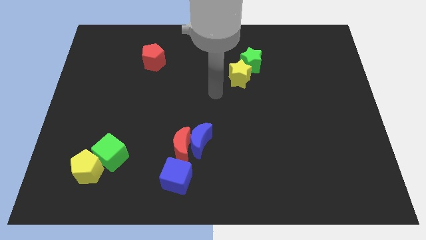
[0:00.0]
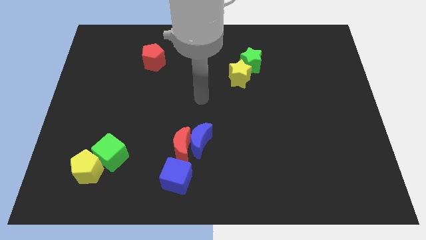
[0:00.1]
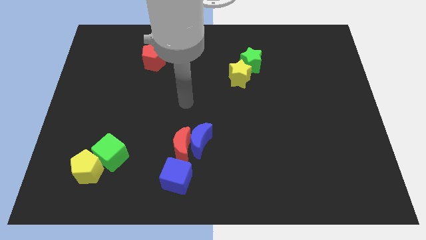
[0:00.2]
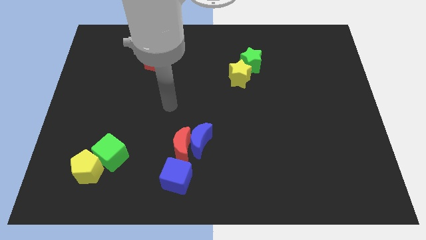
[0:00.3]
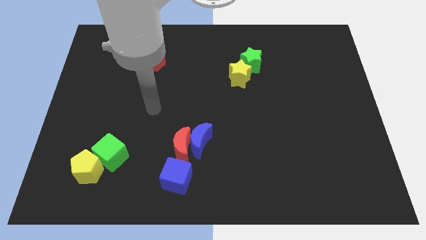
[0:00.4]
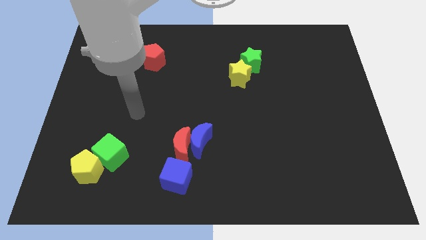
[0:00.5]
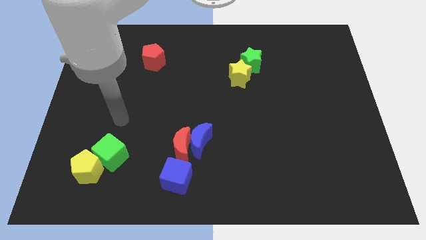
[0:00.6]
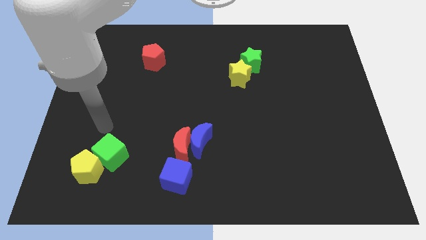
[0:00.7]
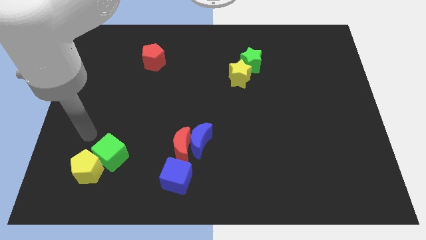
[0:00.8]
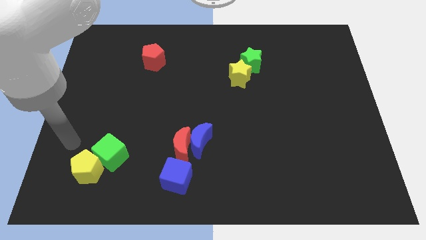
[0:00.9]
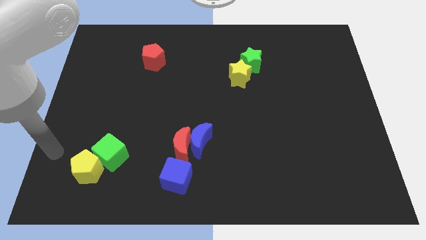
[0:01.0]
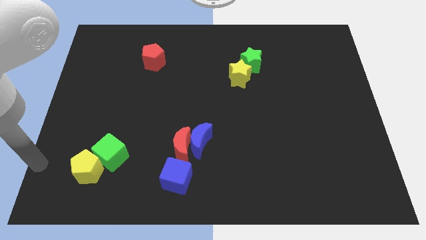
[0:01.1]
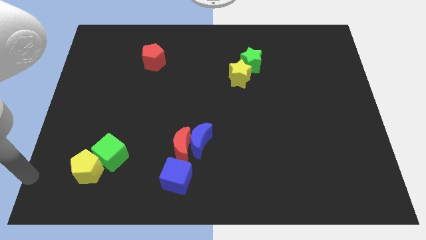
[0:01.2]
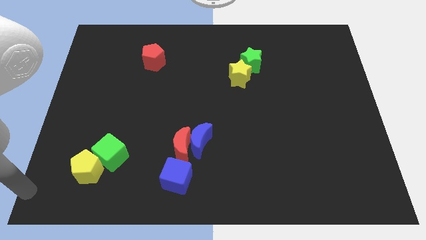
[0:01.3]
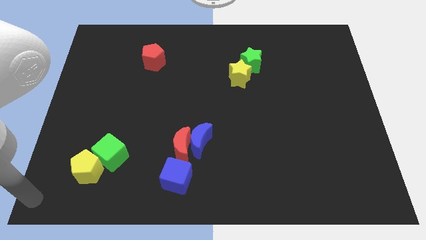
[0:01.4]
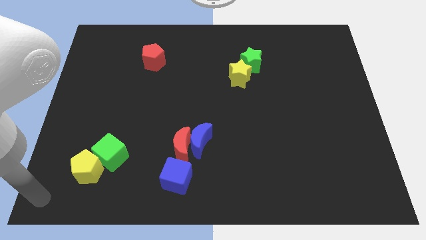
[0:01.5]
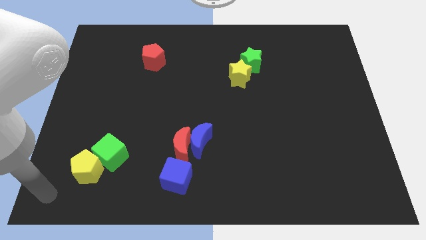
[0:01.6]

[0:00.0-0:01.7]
drag the arm to the bottom left corner of the board

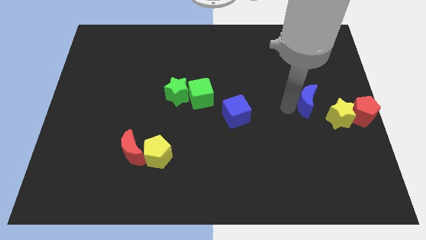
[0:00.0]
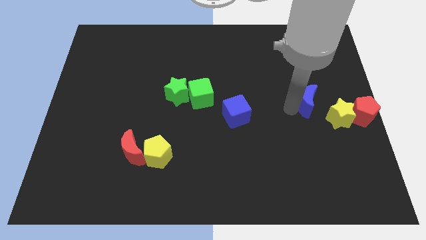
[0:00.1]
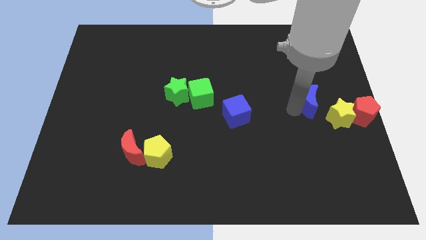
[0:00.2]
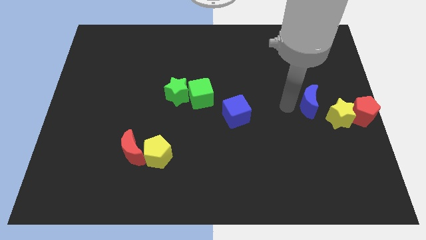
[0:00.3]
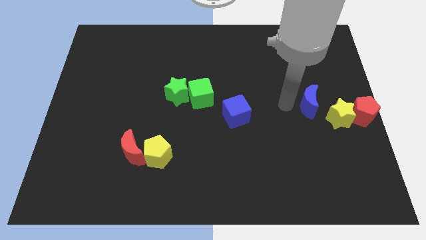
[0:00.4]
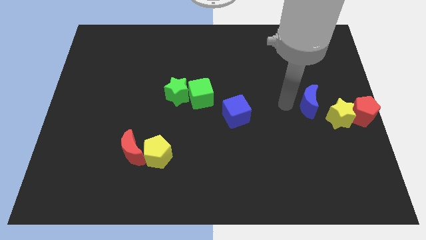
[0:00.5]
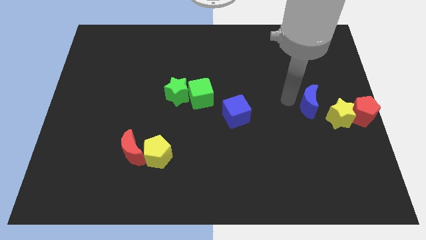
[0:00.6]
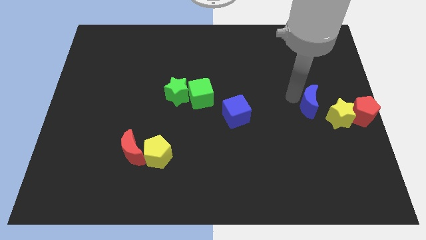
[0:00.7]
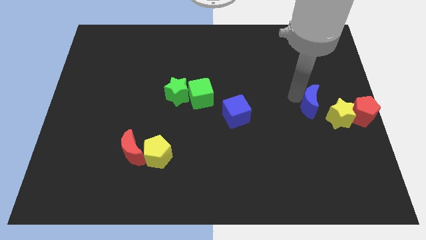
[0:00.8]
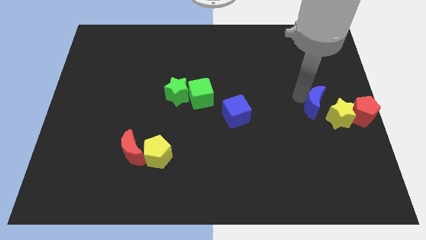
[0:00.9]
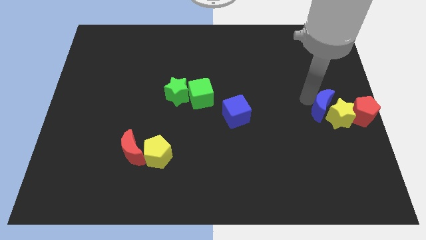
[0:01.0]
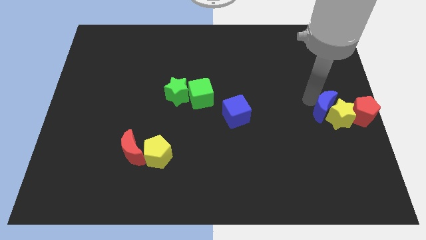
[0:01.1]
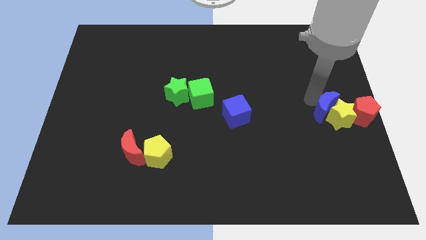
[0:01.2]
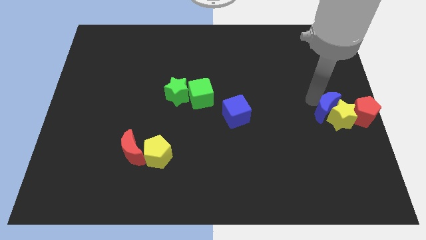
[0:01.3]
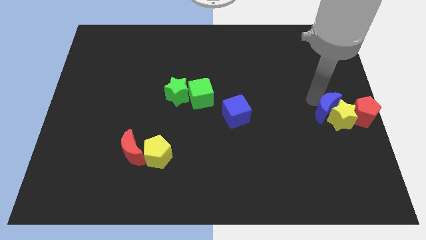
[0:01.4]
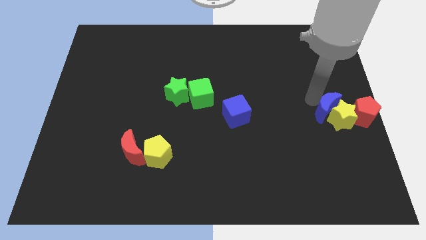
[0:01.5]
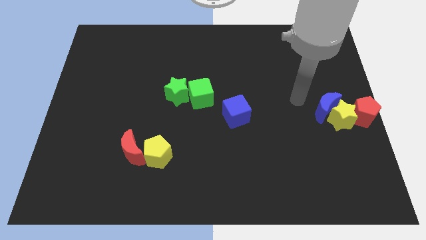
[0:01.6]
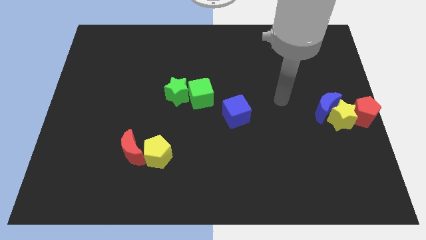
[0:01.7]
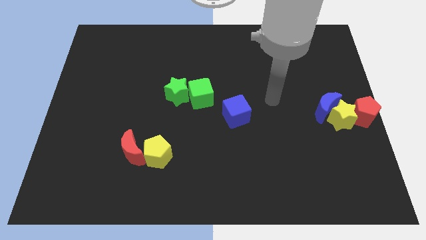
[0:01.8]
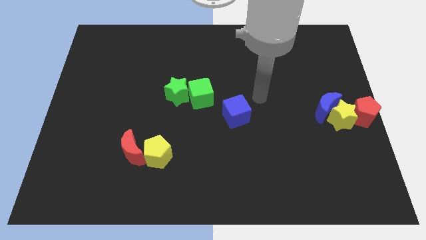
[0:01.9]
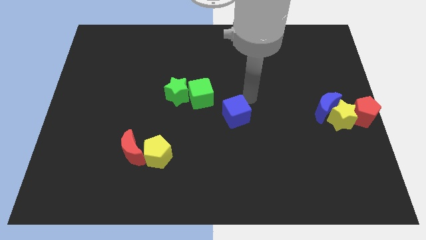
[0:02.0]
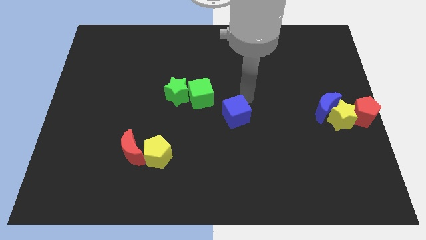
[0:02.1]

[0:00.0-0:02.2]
move blue moon into the yellow star

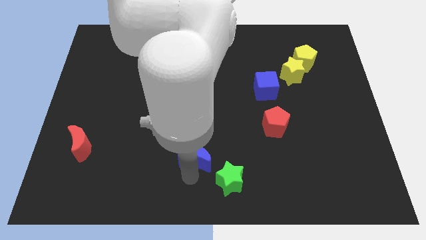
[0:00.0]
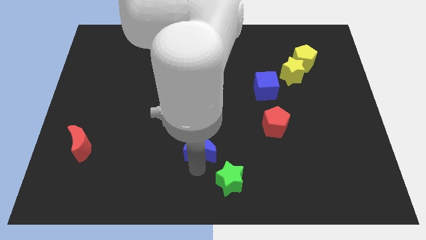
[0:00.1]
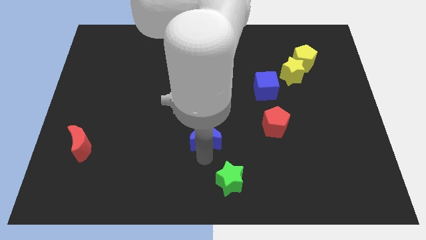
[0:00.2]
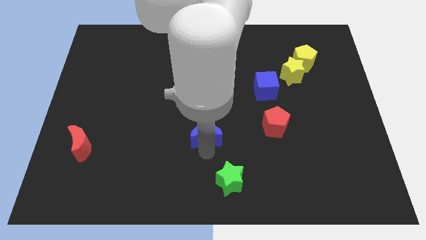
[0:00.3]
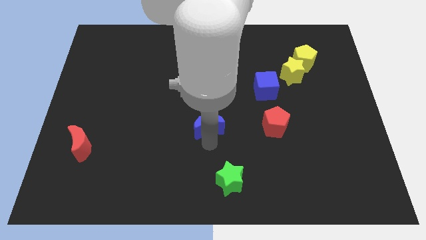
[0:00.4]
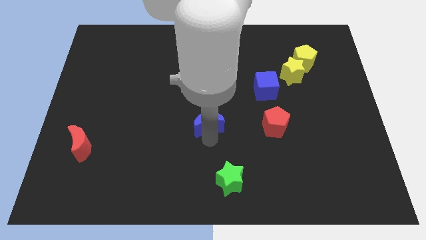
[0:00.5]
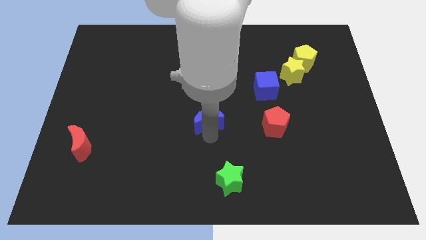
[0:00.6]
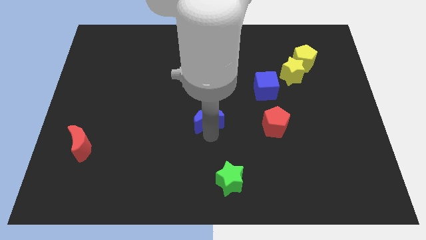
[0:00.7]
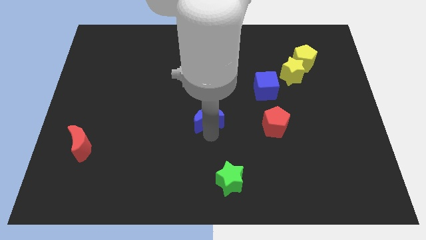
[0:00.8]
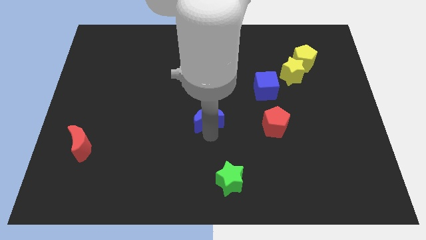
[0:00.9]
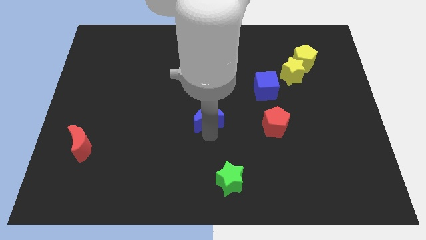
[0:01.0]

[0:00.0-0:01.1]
place blue moon to the left of red pentagon

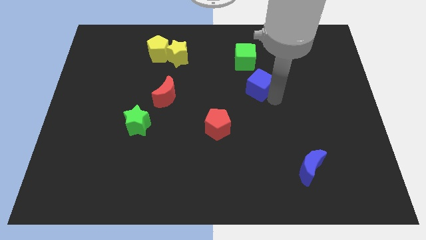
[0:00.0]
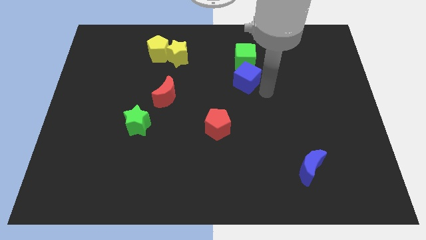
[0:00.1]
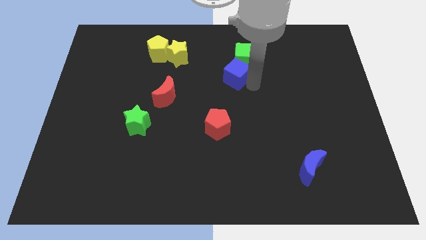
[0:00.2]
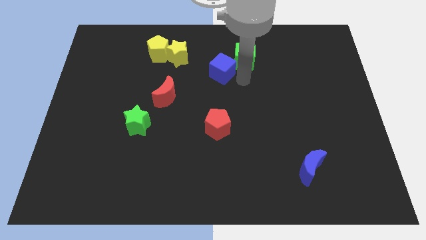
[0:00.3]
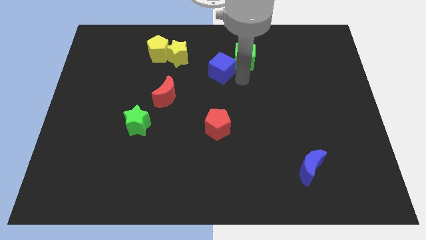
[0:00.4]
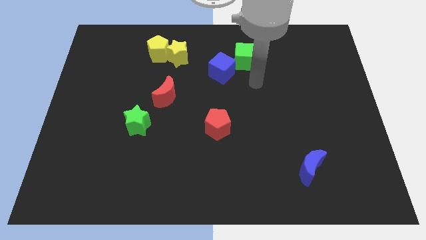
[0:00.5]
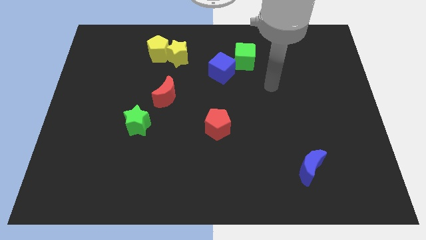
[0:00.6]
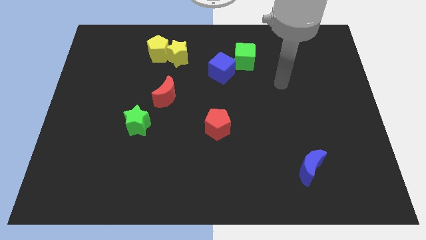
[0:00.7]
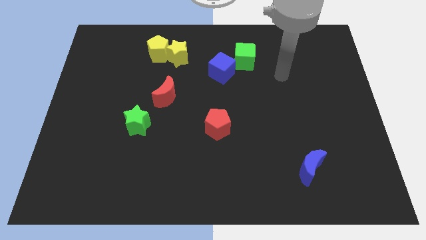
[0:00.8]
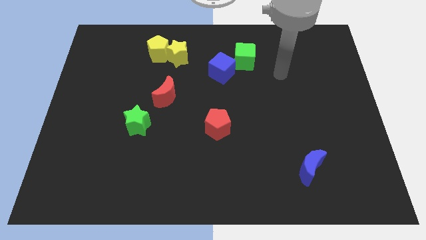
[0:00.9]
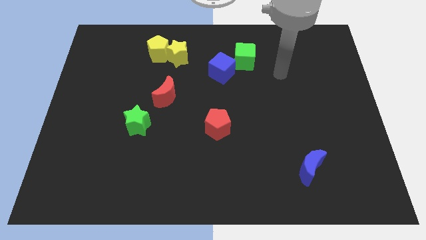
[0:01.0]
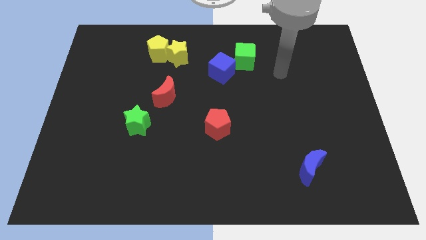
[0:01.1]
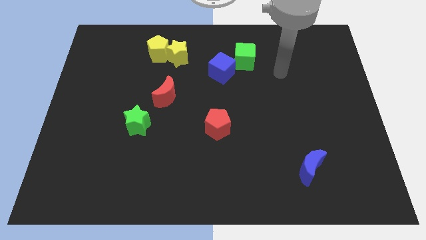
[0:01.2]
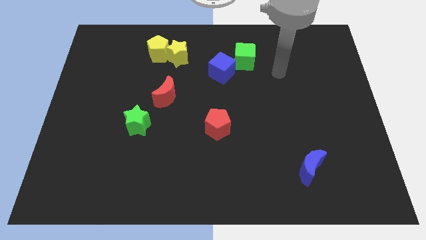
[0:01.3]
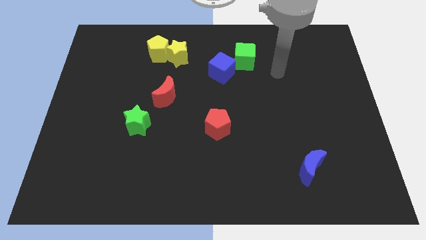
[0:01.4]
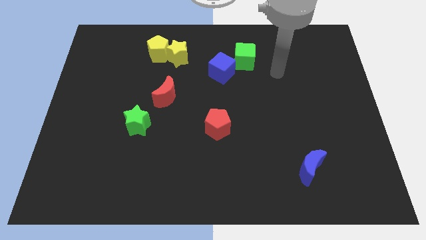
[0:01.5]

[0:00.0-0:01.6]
move blue cube towards yellow star

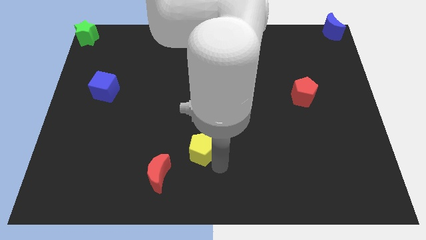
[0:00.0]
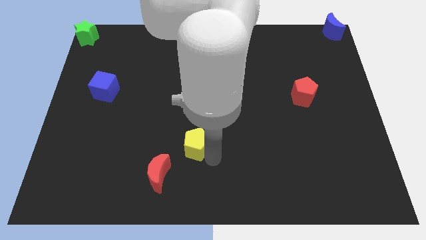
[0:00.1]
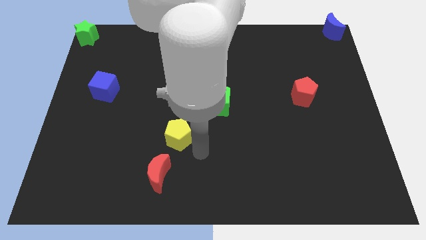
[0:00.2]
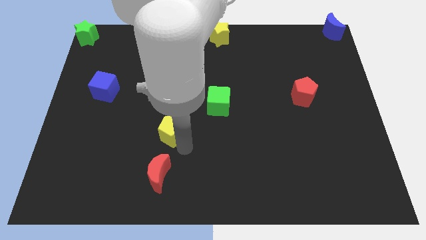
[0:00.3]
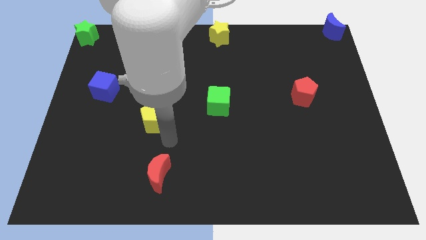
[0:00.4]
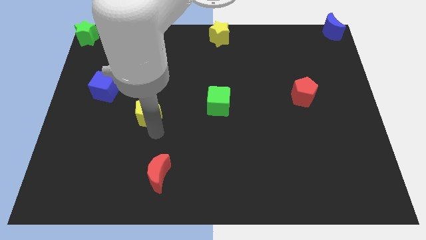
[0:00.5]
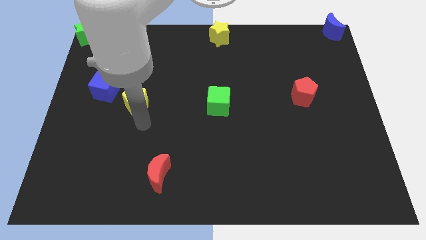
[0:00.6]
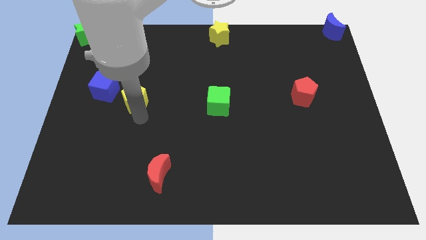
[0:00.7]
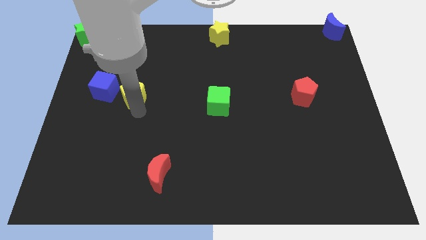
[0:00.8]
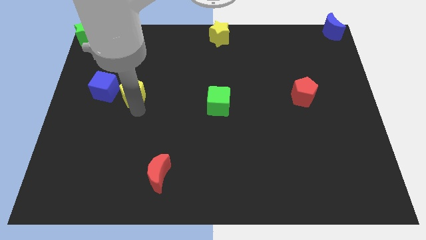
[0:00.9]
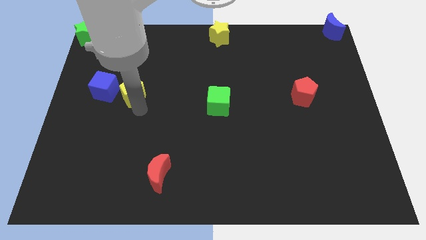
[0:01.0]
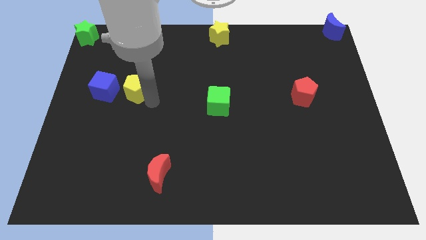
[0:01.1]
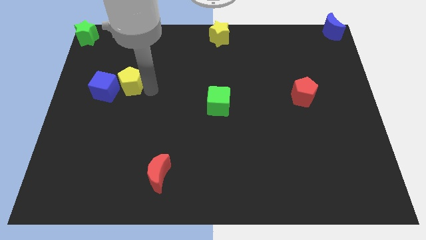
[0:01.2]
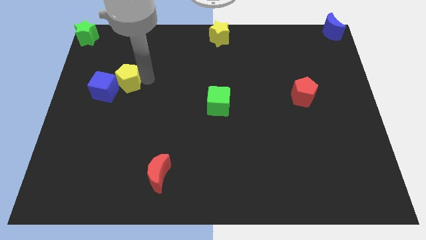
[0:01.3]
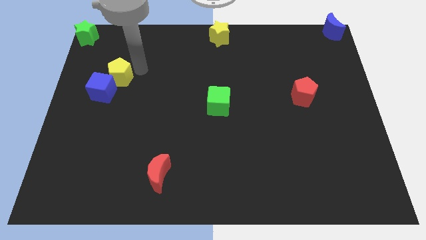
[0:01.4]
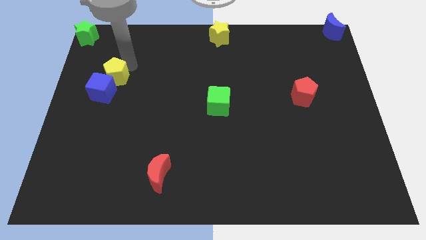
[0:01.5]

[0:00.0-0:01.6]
move the yellow pentagon into the blue cube

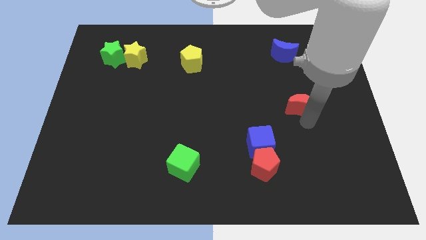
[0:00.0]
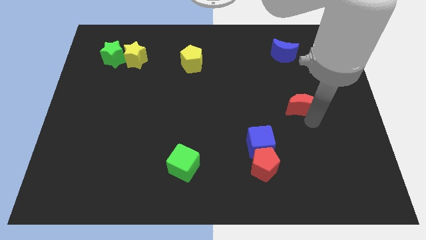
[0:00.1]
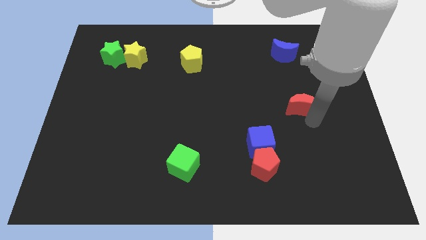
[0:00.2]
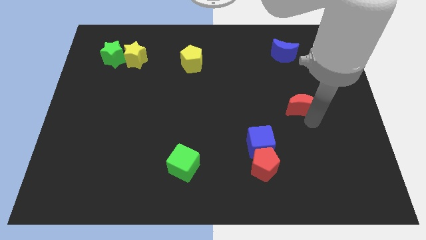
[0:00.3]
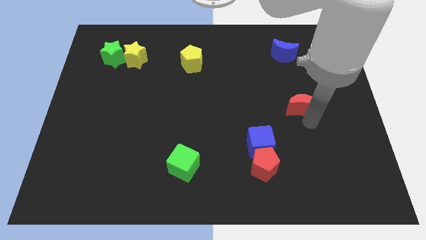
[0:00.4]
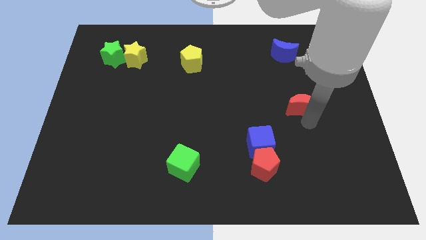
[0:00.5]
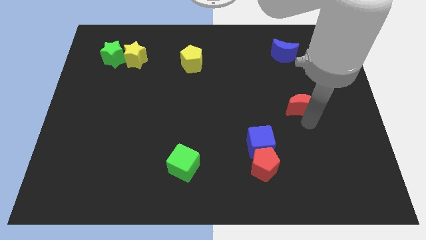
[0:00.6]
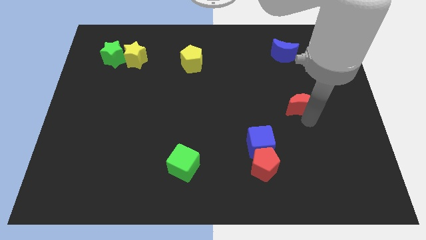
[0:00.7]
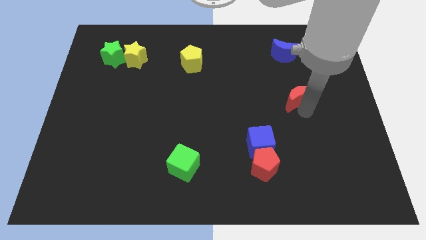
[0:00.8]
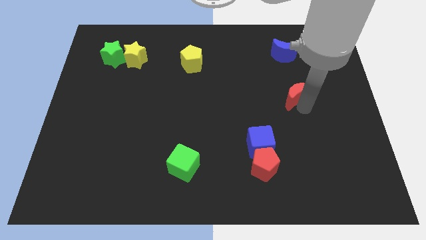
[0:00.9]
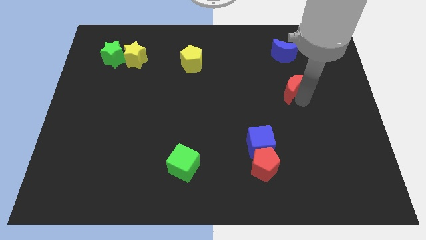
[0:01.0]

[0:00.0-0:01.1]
slide red moon towards blue moon
